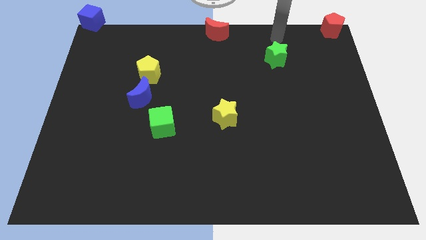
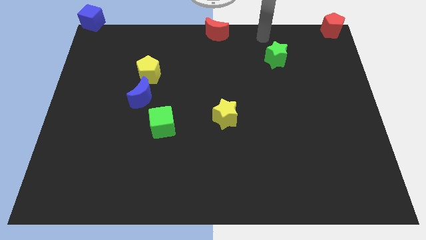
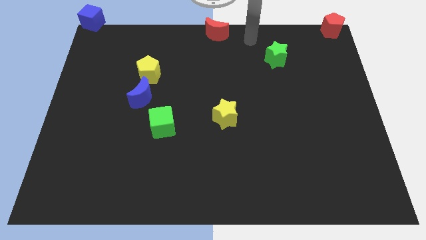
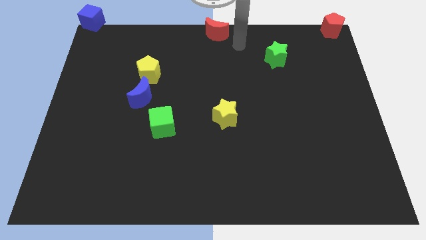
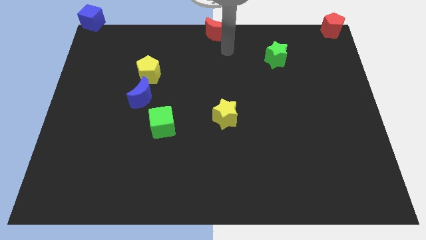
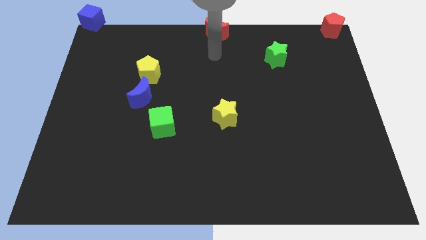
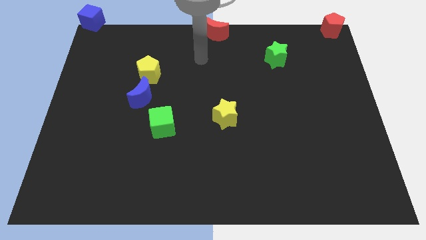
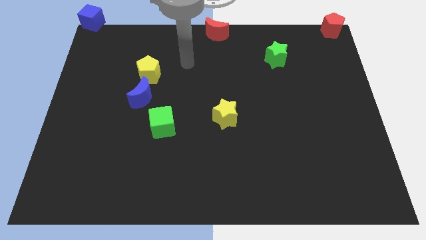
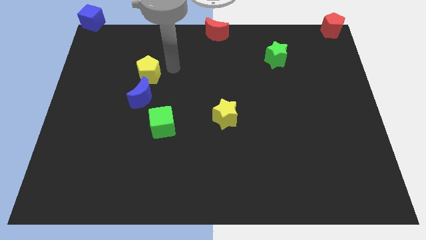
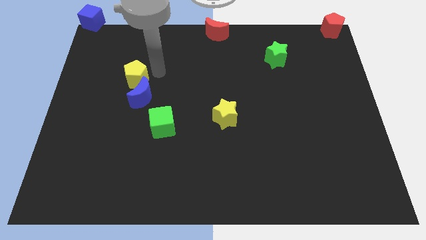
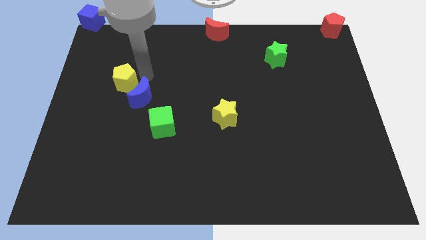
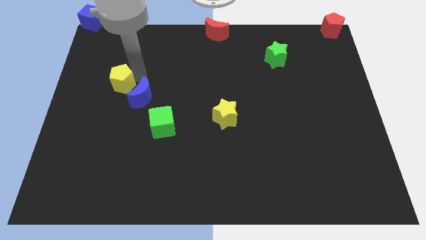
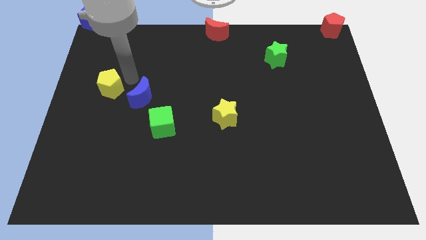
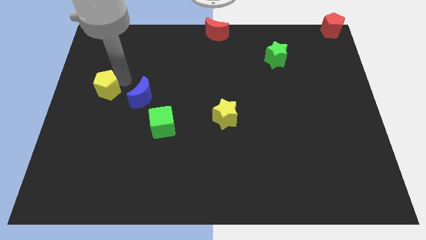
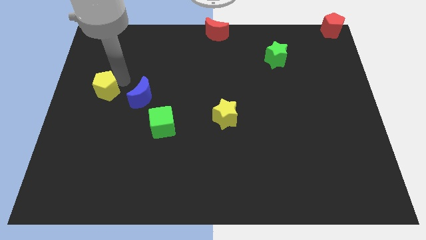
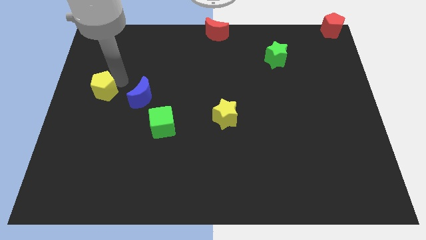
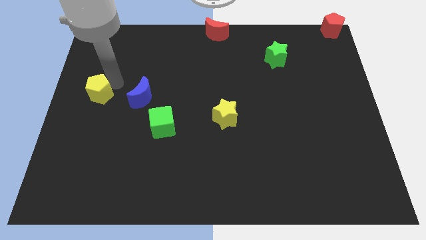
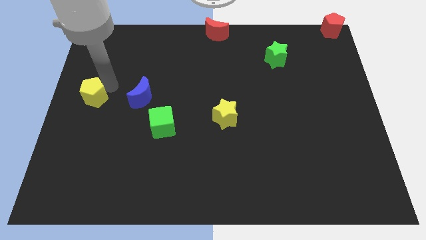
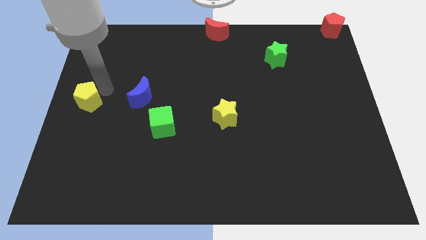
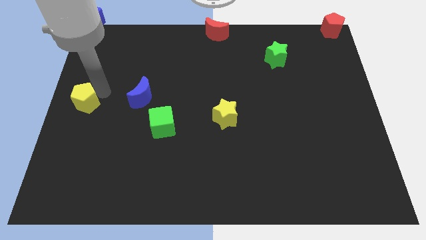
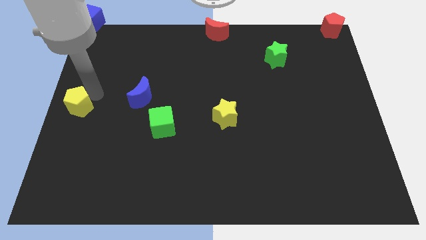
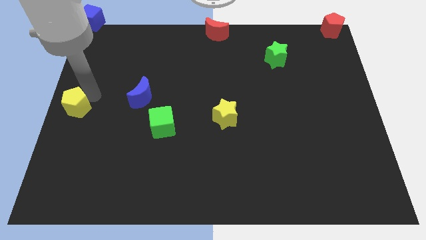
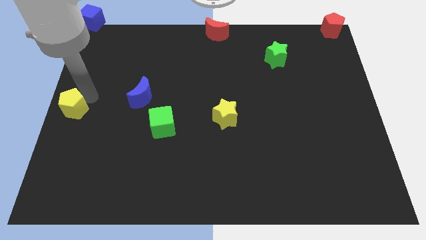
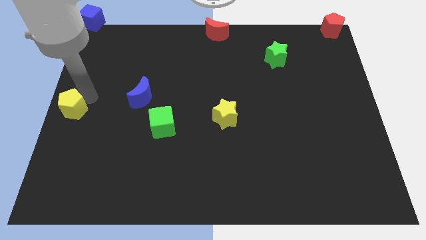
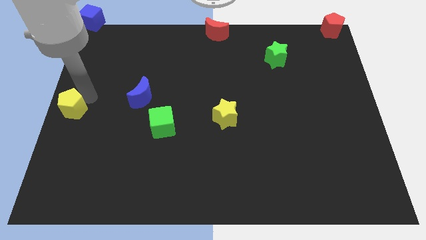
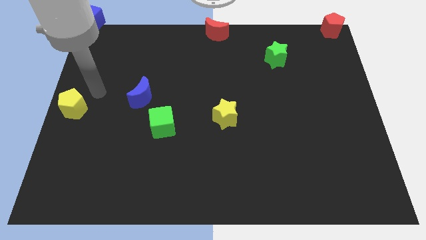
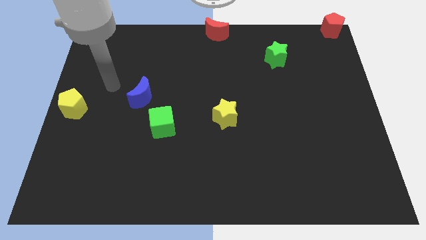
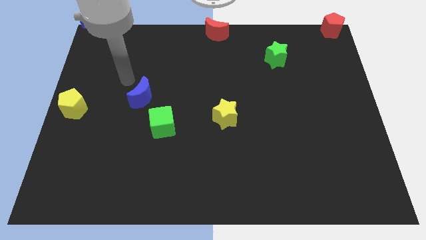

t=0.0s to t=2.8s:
move the yellow pentagon to the center left of the board

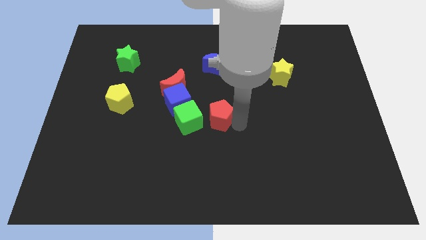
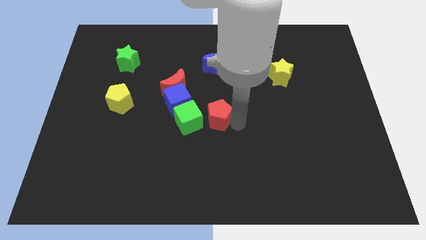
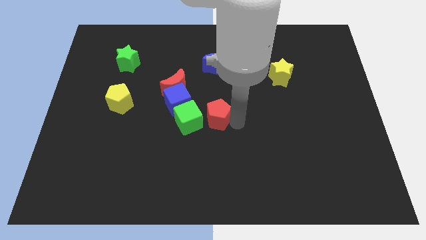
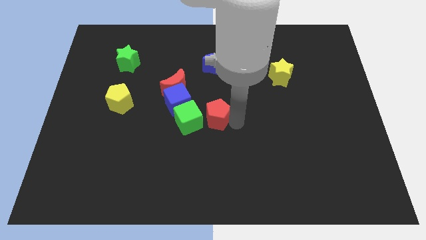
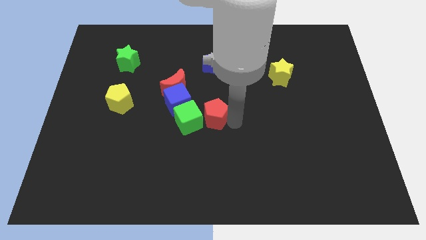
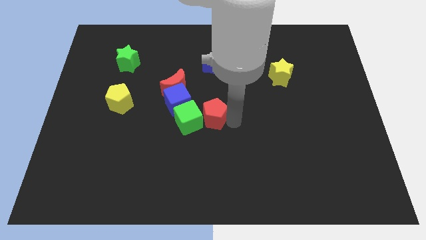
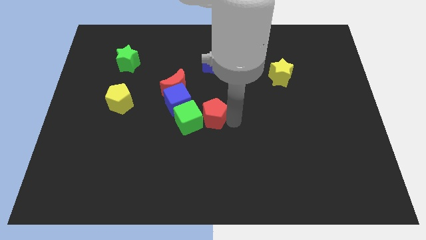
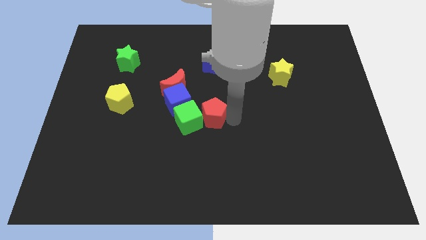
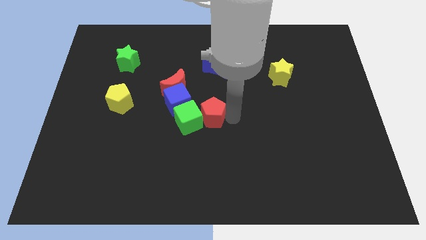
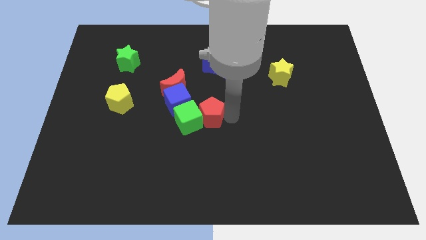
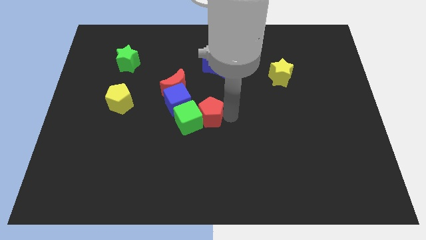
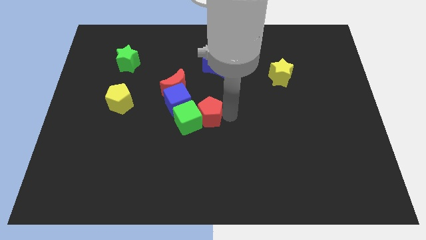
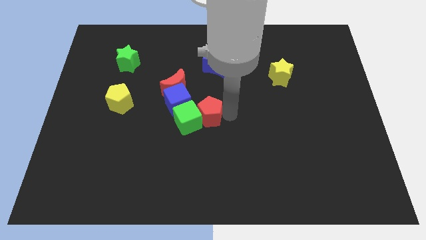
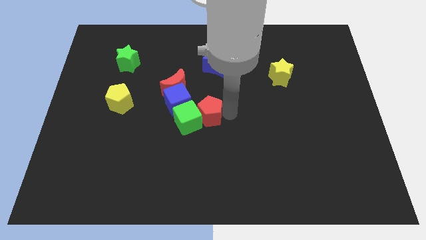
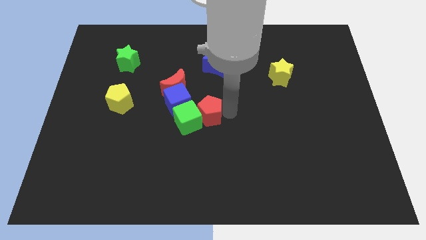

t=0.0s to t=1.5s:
slide the red pentagon into the green cube

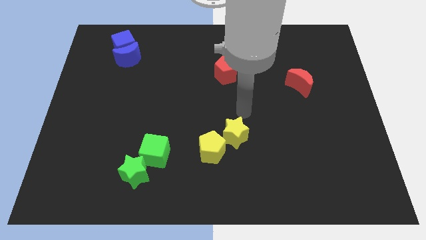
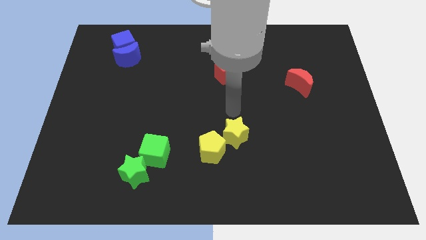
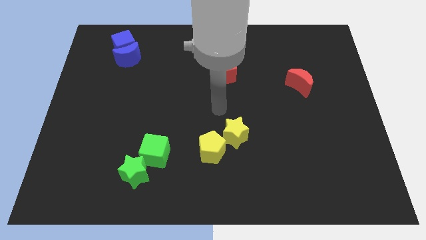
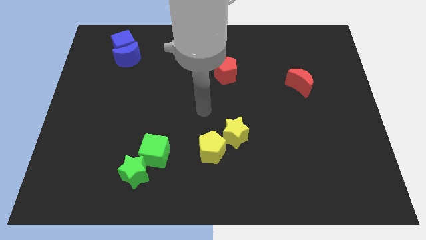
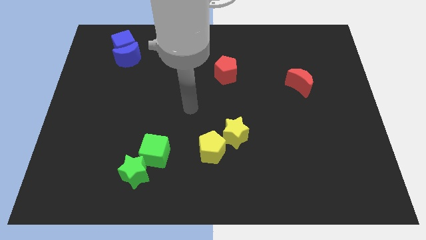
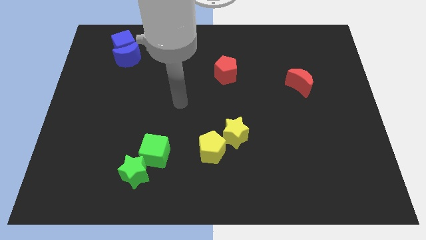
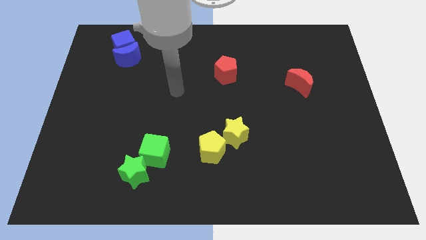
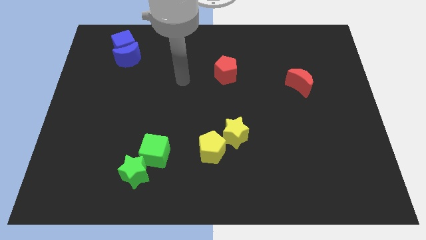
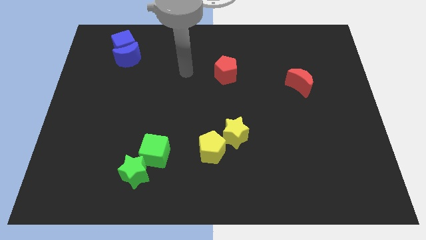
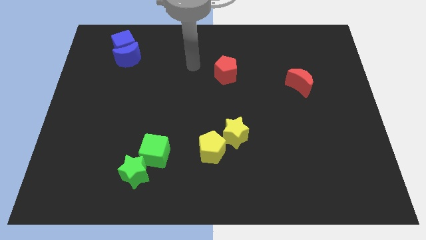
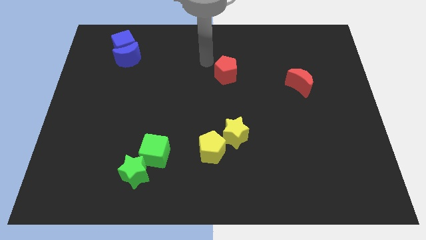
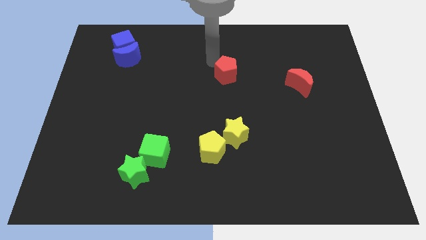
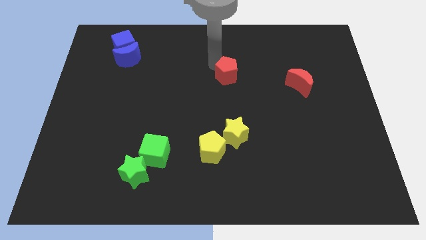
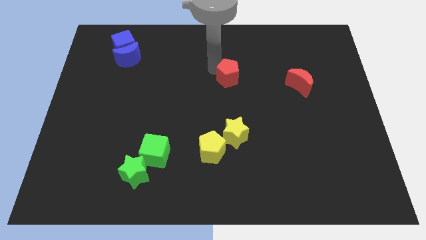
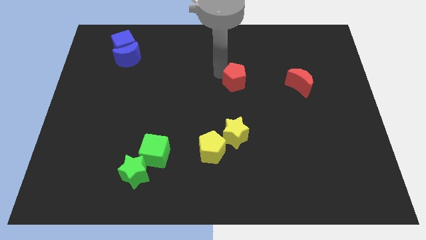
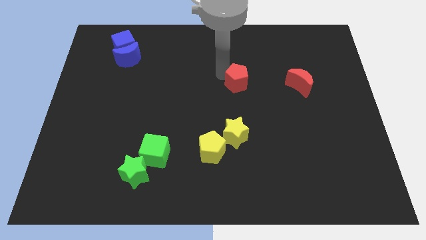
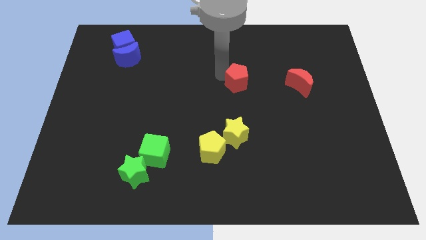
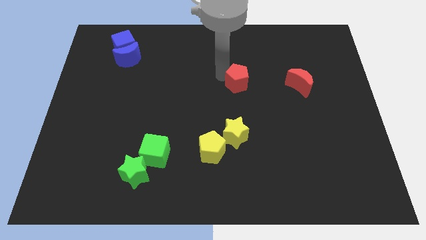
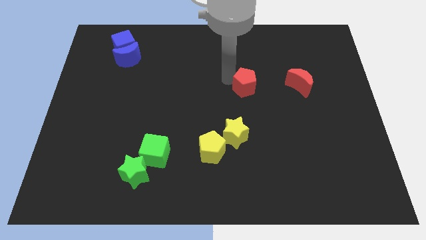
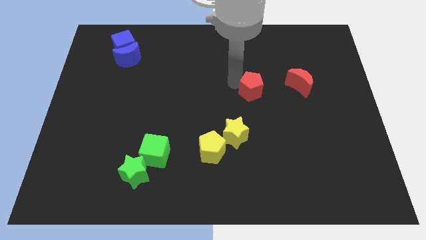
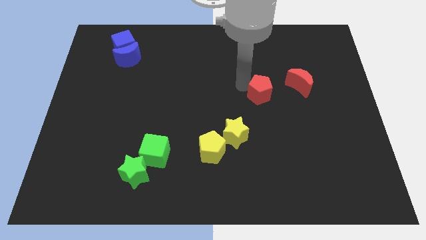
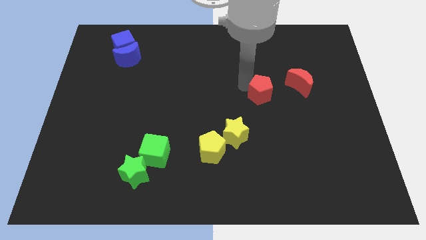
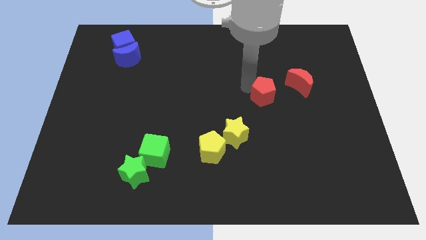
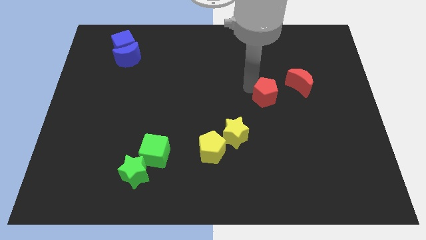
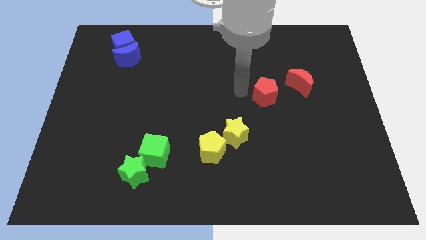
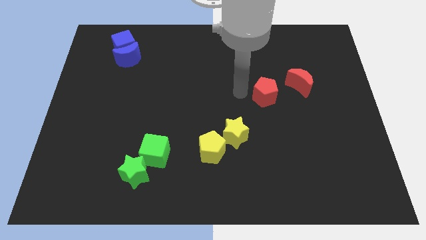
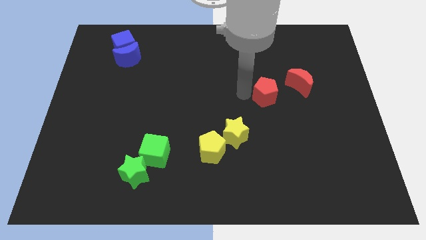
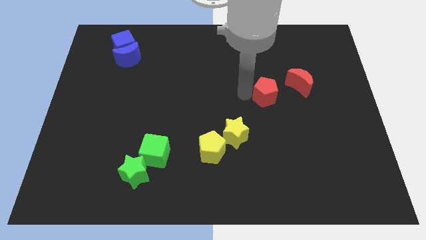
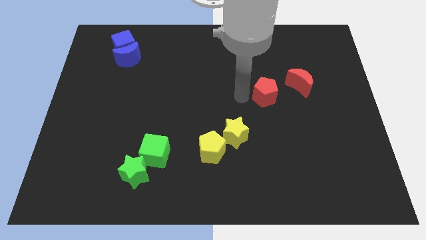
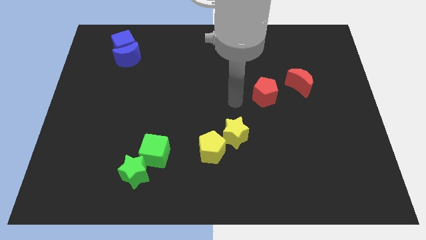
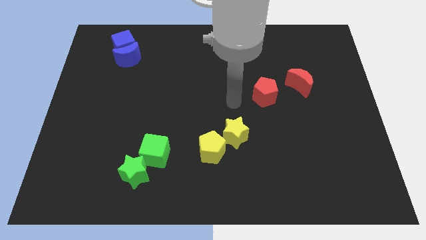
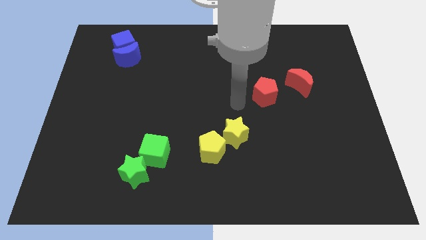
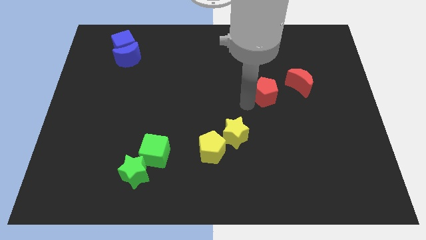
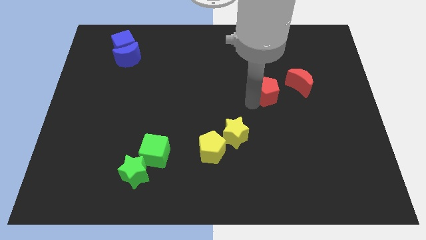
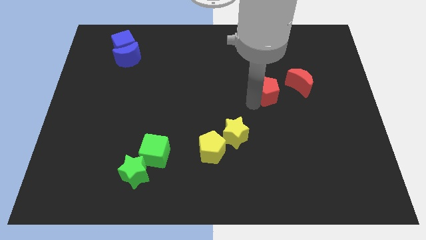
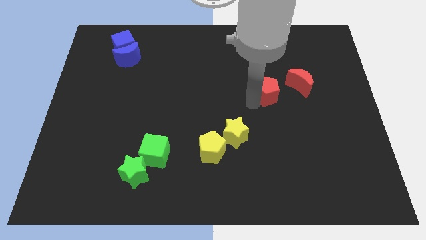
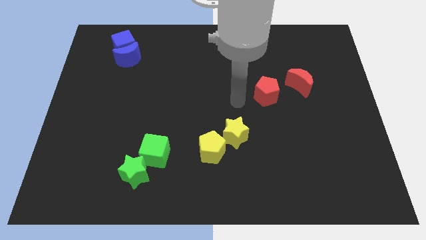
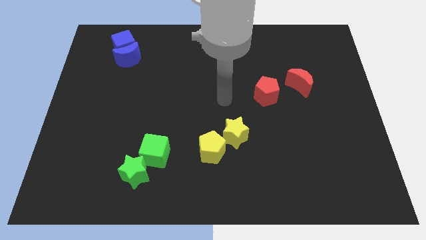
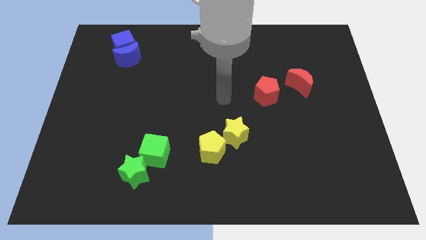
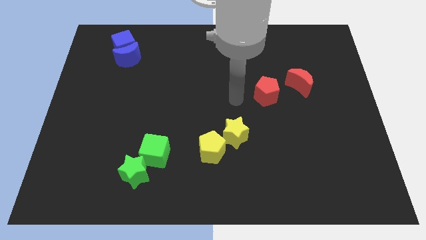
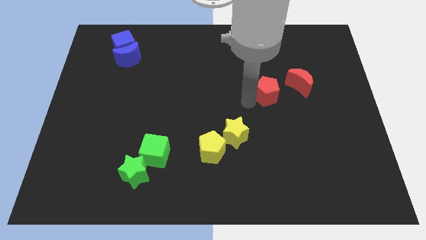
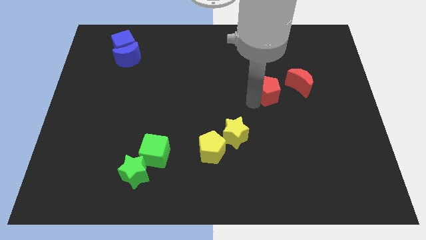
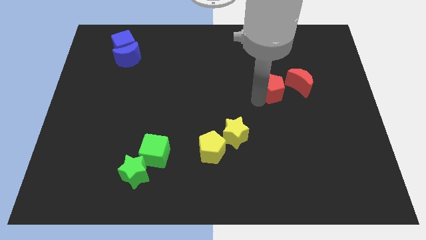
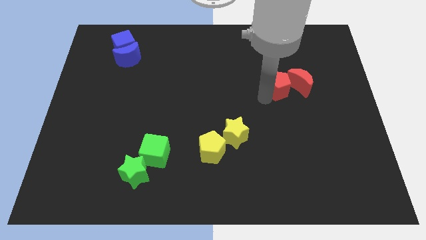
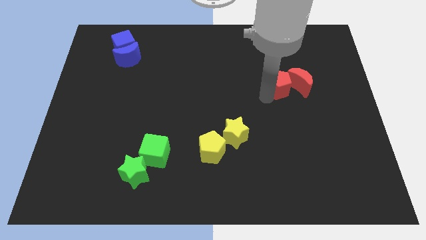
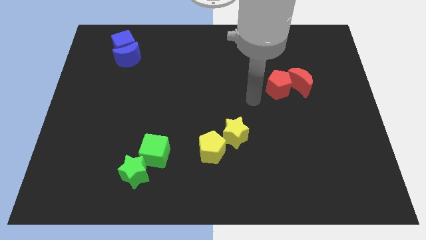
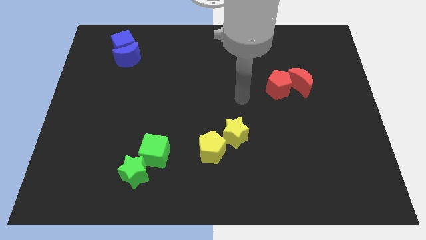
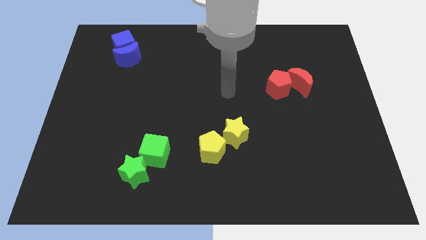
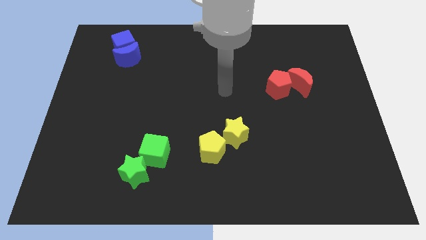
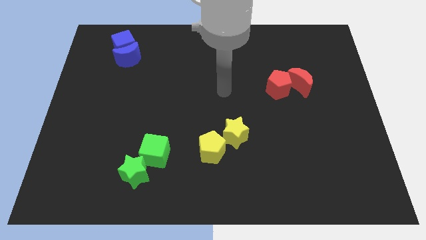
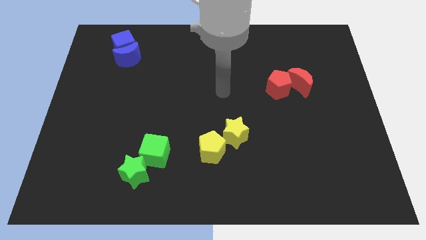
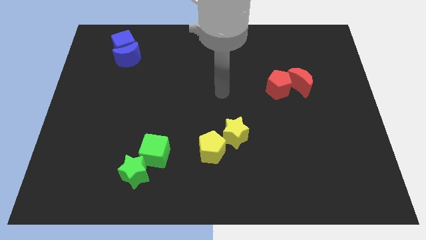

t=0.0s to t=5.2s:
slide red pentagon into red moon
